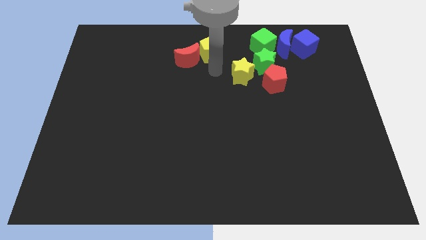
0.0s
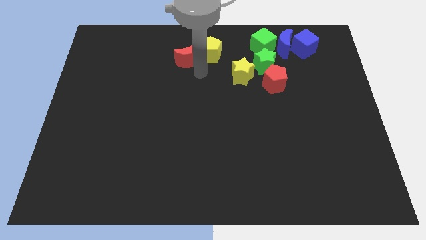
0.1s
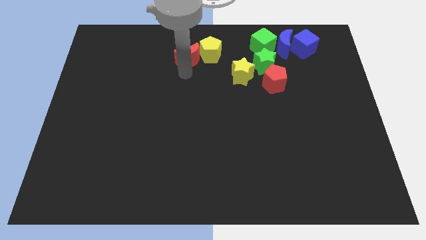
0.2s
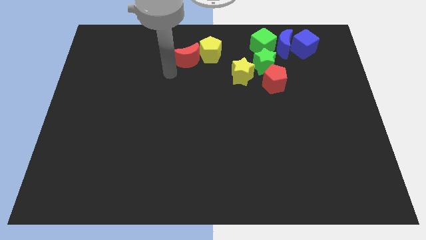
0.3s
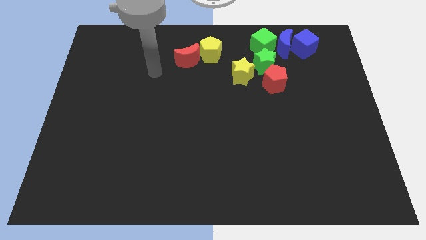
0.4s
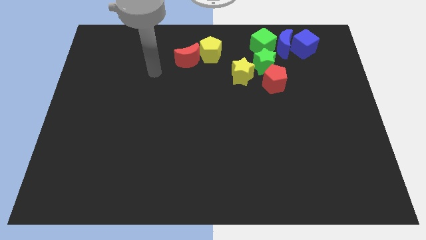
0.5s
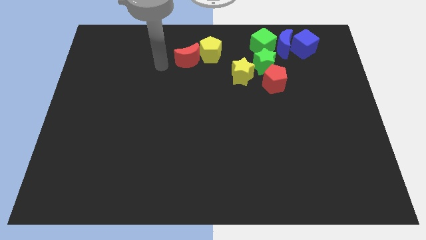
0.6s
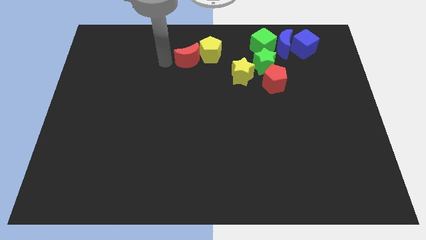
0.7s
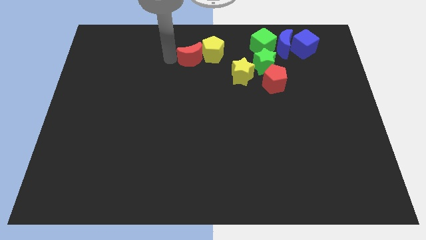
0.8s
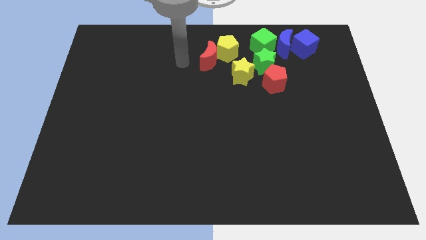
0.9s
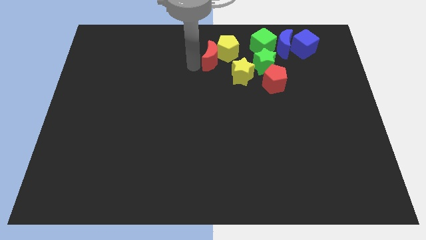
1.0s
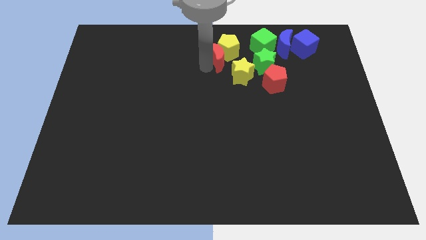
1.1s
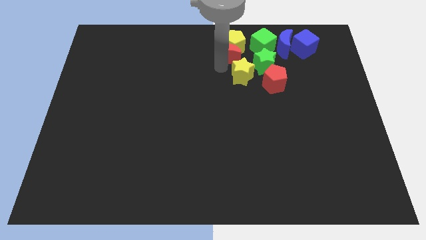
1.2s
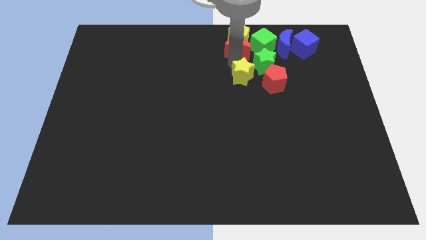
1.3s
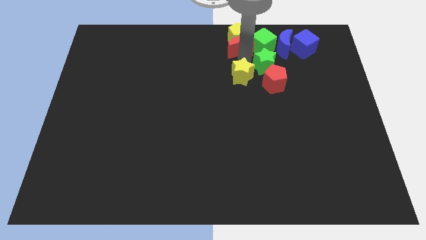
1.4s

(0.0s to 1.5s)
place the red crescent below the yellow pentagon

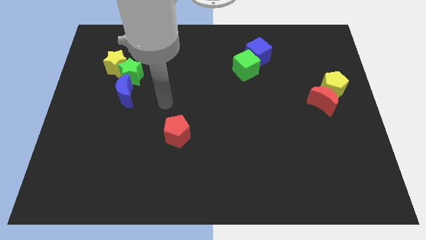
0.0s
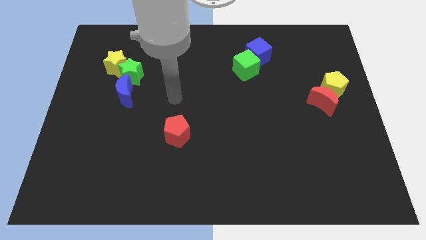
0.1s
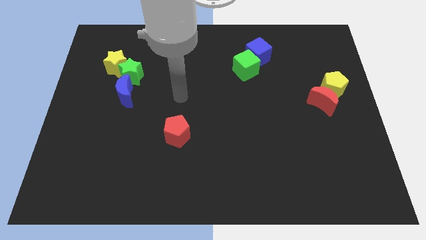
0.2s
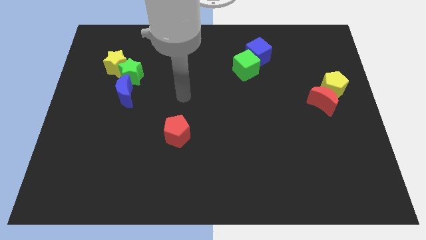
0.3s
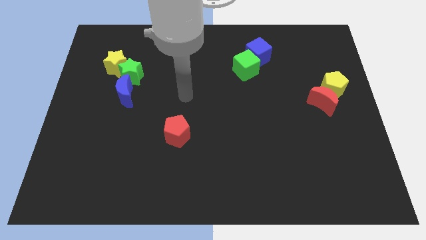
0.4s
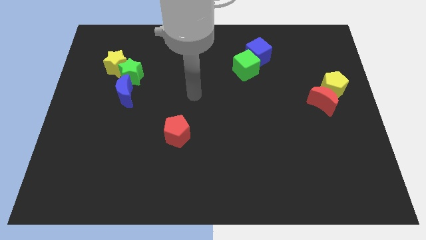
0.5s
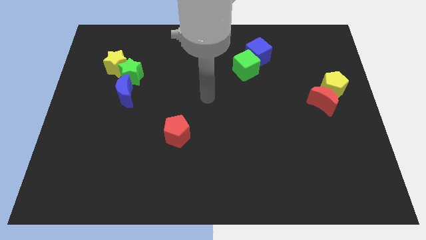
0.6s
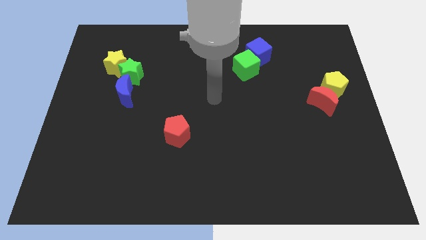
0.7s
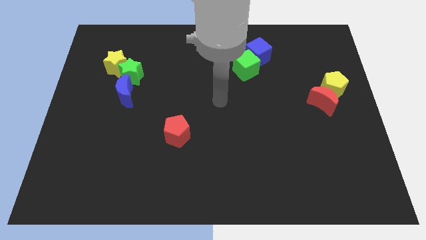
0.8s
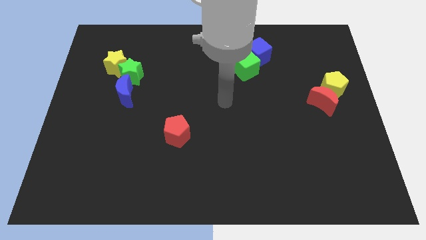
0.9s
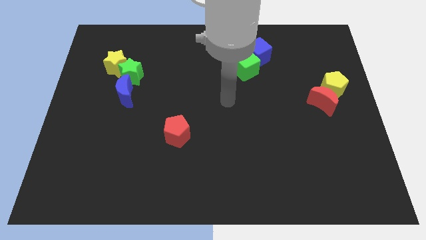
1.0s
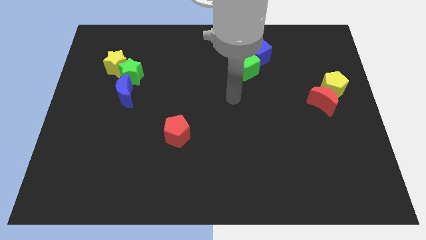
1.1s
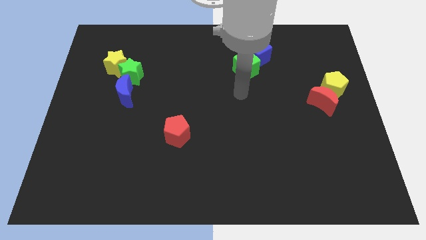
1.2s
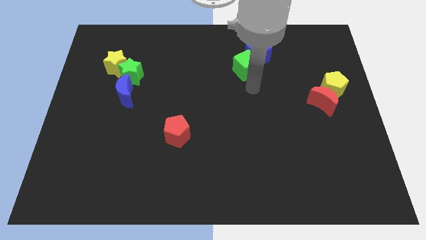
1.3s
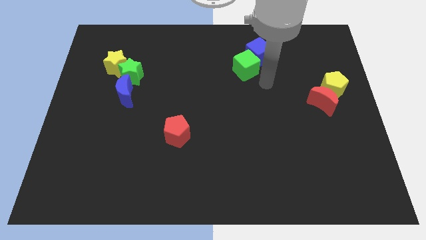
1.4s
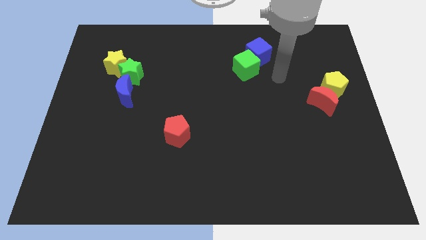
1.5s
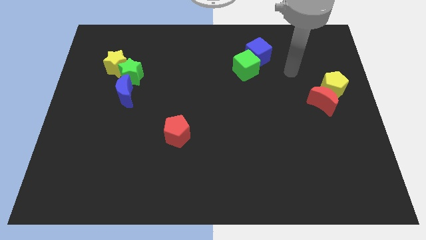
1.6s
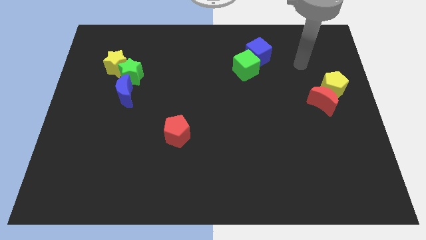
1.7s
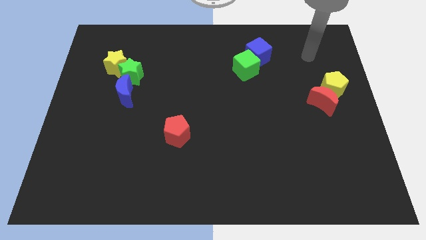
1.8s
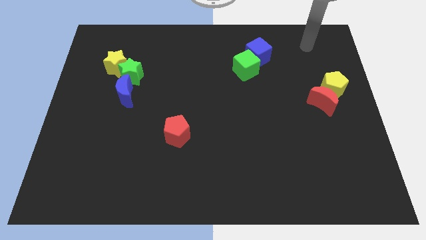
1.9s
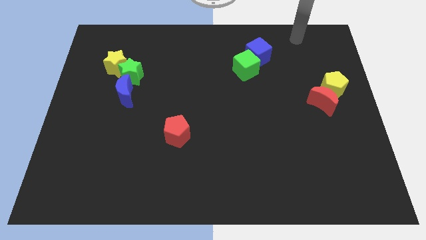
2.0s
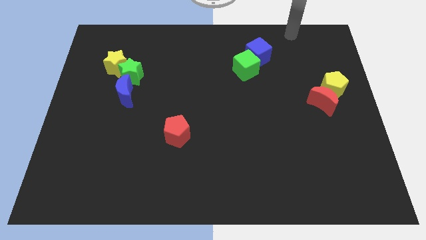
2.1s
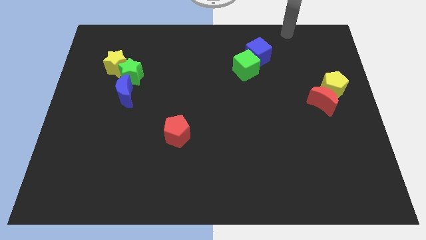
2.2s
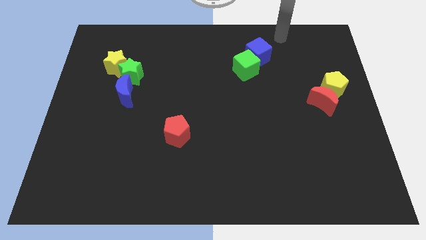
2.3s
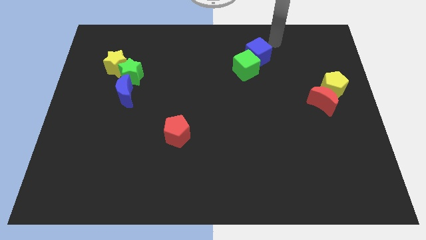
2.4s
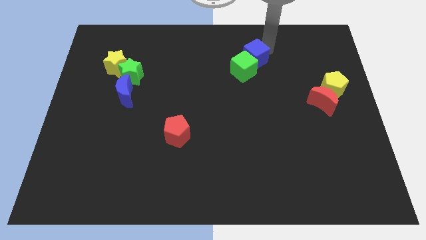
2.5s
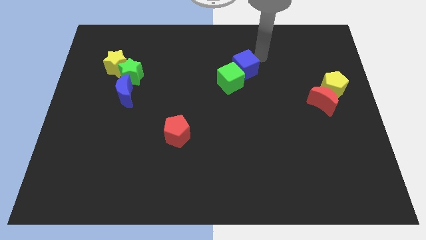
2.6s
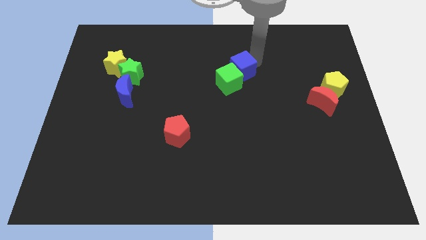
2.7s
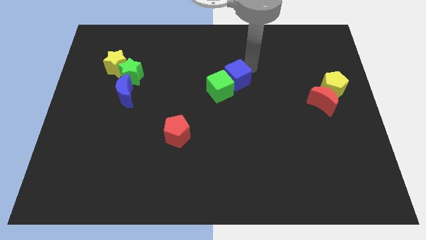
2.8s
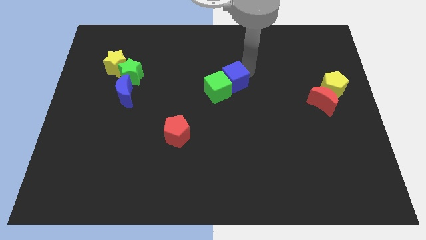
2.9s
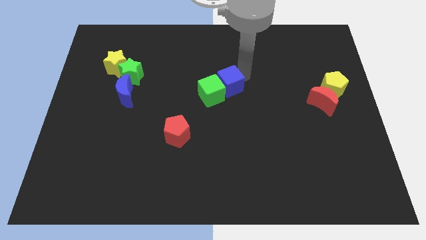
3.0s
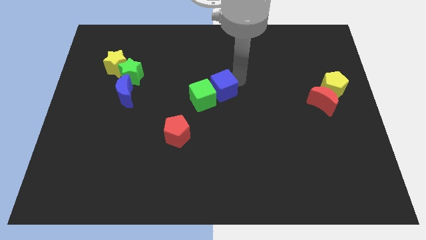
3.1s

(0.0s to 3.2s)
move both the cube to the red pentagon

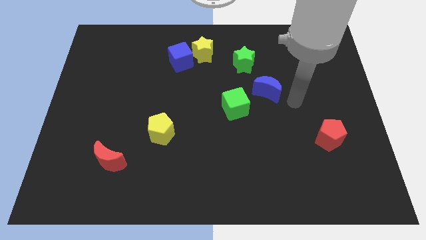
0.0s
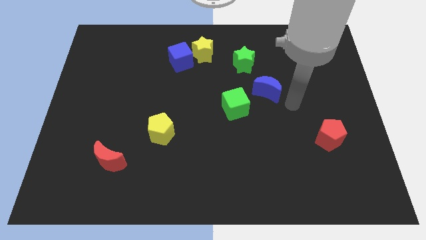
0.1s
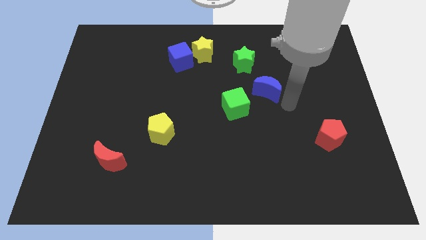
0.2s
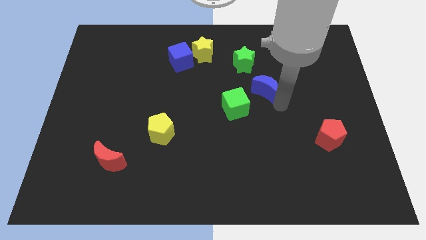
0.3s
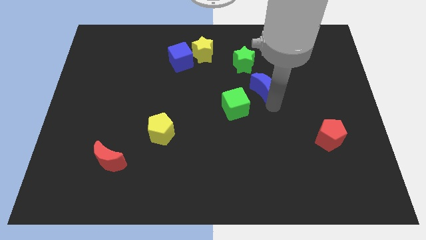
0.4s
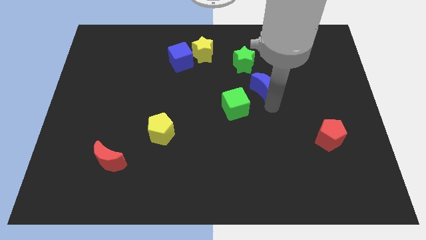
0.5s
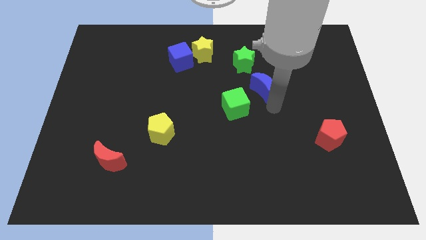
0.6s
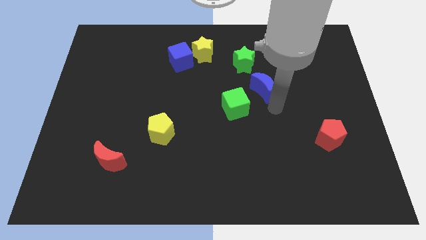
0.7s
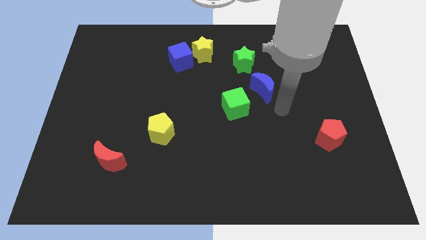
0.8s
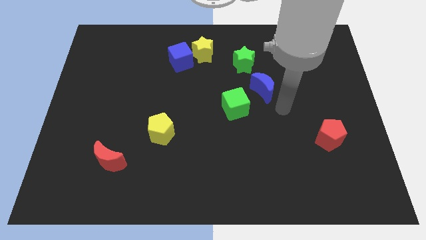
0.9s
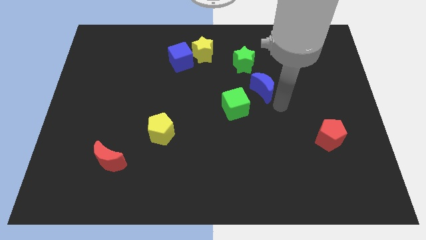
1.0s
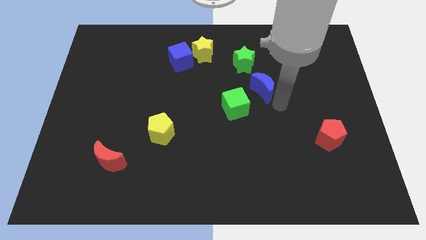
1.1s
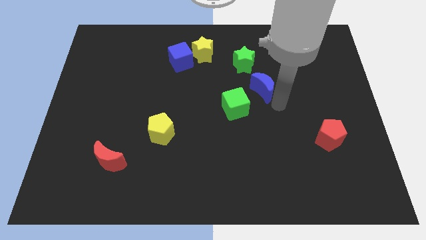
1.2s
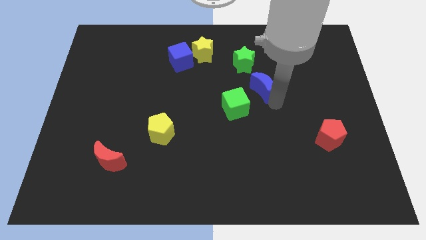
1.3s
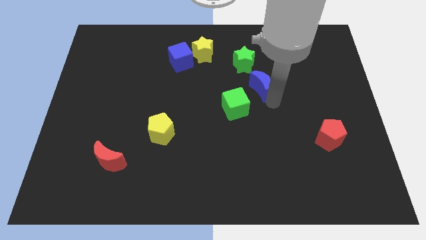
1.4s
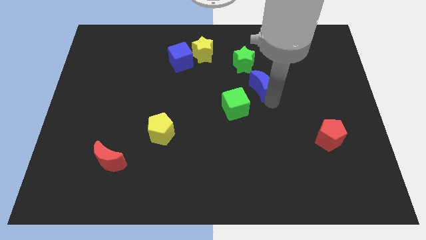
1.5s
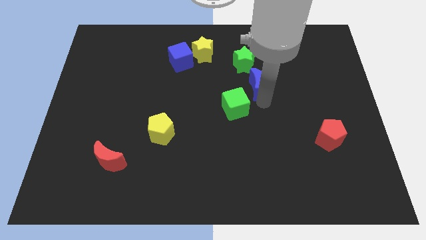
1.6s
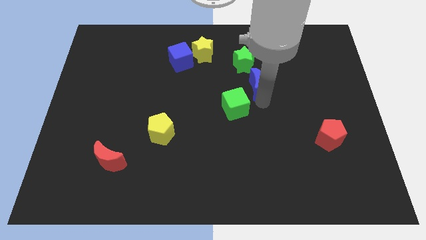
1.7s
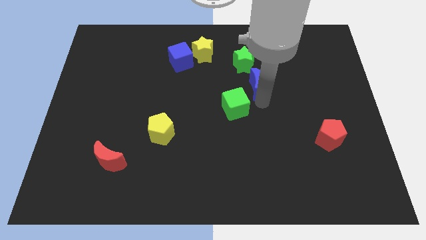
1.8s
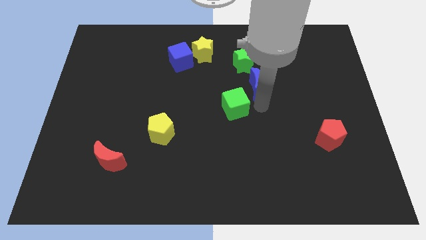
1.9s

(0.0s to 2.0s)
move blue moon close to green star

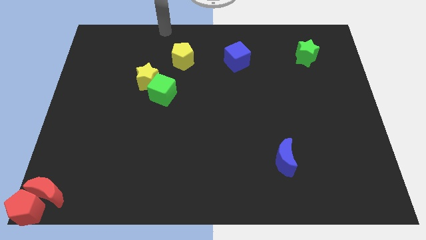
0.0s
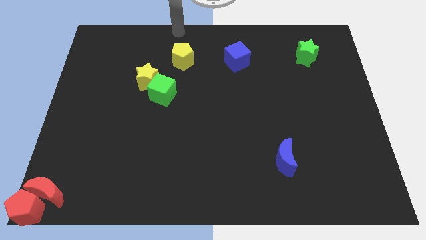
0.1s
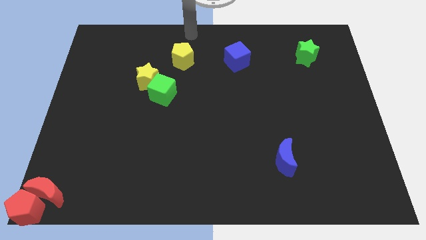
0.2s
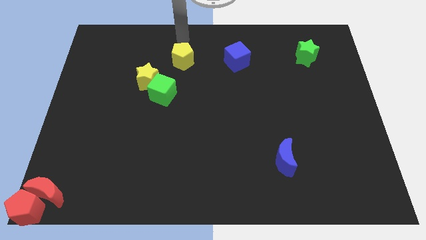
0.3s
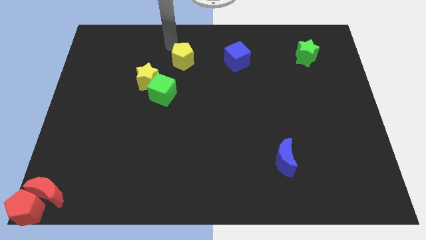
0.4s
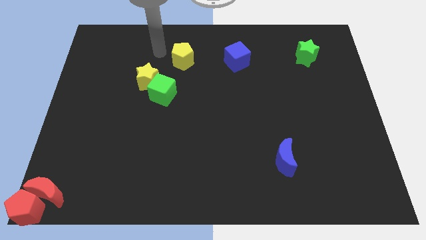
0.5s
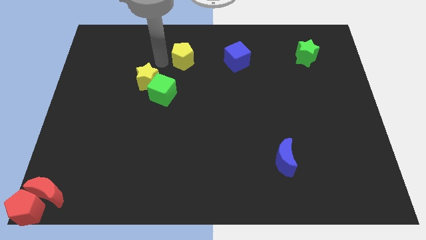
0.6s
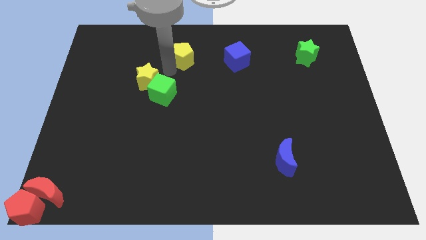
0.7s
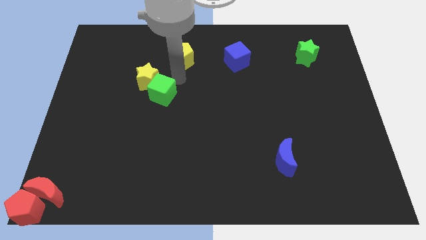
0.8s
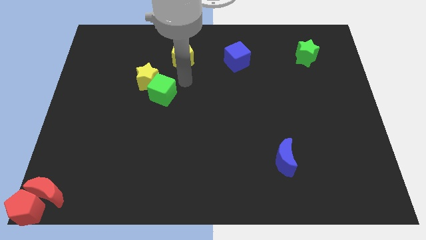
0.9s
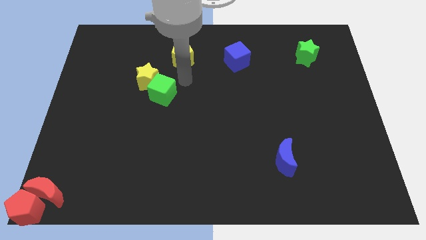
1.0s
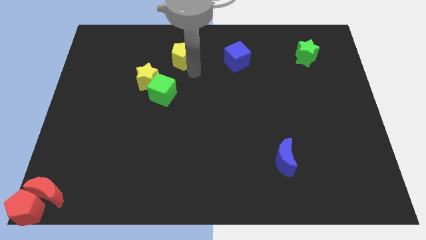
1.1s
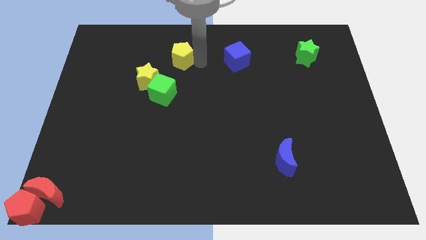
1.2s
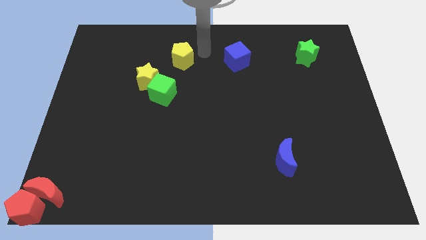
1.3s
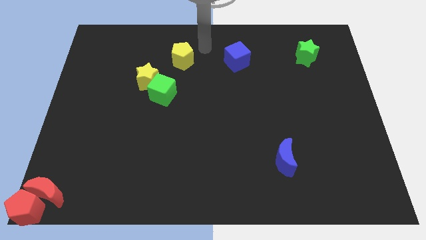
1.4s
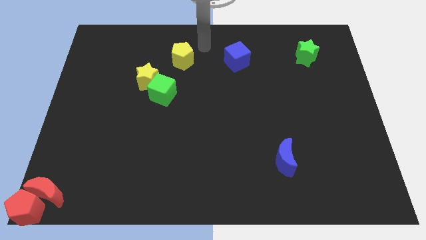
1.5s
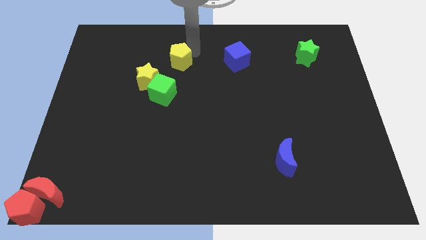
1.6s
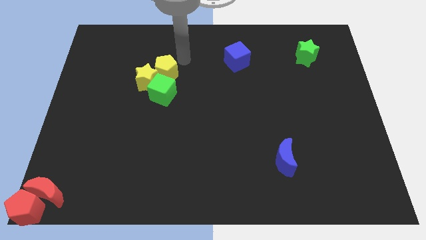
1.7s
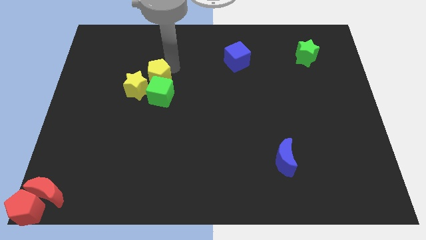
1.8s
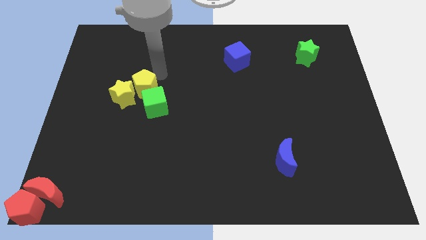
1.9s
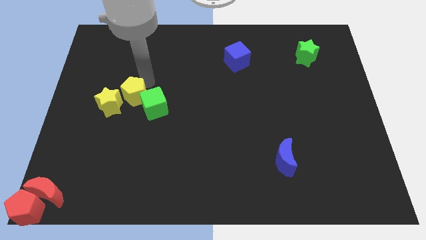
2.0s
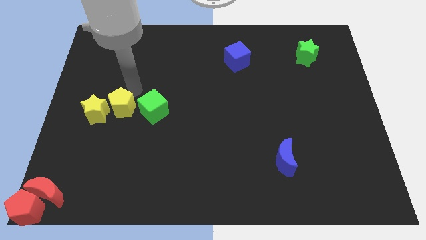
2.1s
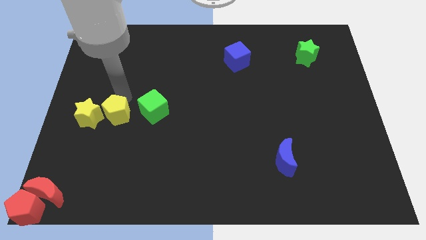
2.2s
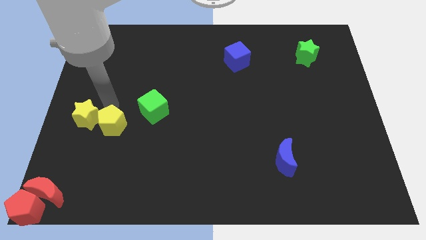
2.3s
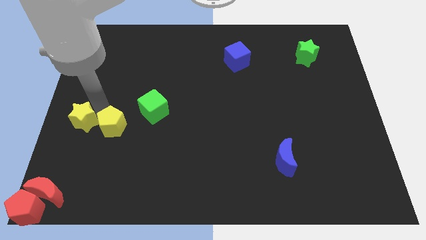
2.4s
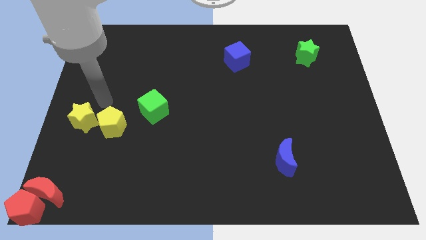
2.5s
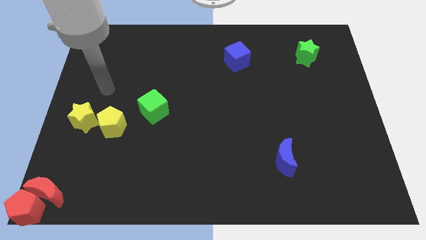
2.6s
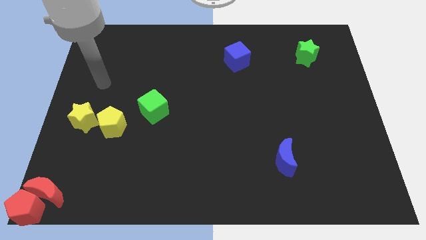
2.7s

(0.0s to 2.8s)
push the yellow star towards the center left with the yellow pentagon
